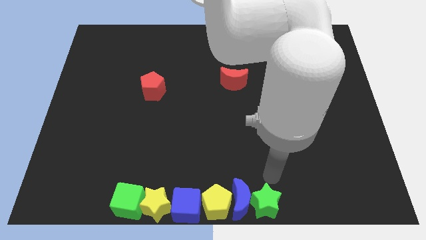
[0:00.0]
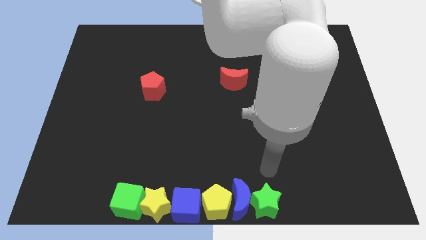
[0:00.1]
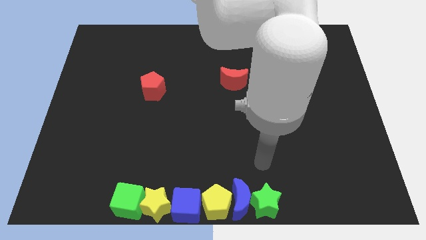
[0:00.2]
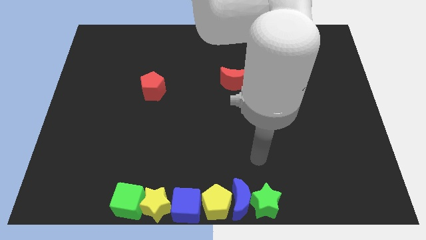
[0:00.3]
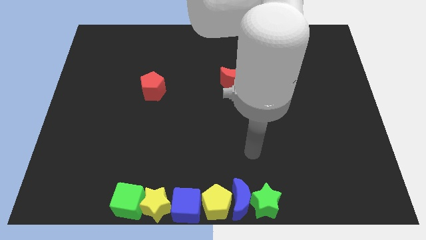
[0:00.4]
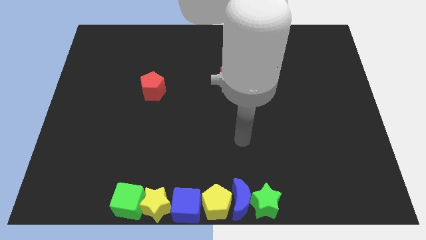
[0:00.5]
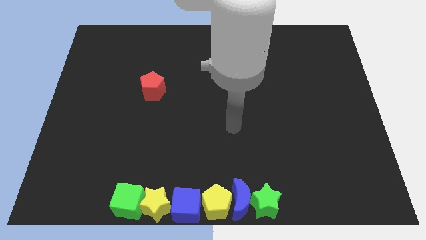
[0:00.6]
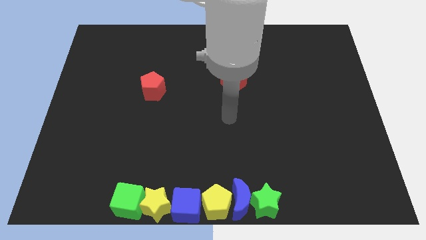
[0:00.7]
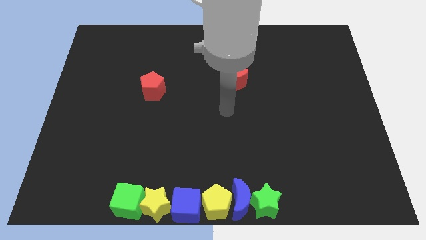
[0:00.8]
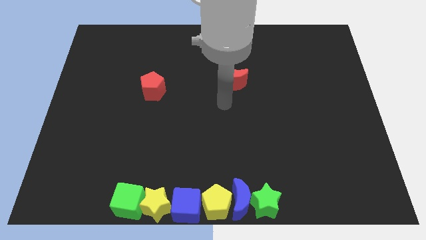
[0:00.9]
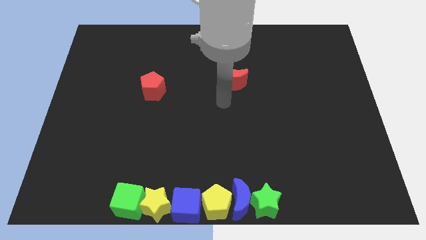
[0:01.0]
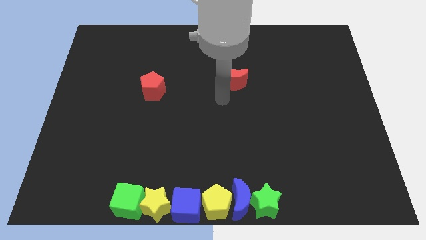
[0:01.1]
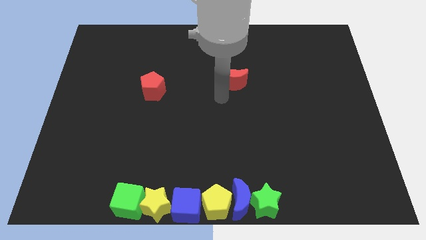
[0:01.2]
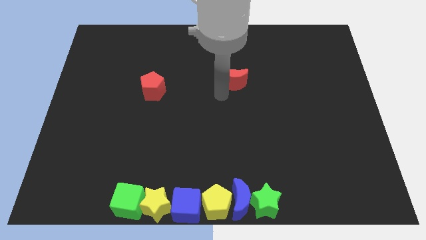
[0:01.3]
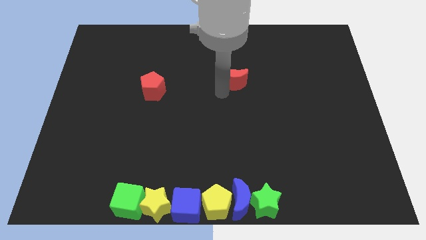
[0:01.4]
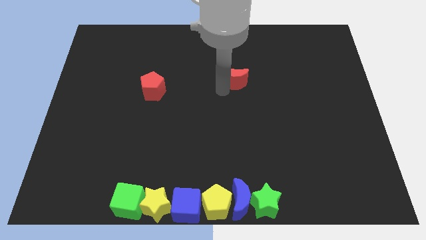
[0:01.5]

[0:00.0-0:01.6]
point the arm below the red moon

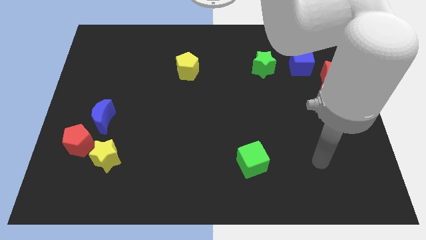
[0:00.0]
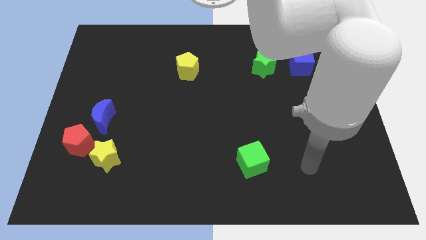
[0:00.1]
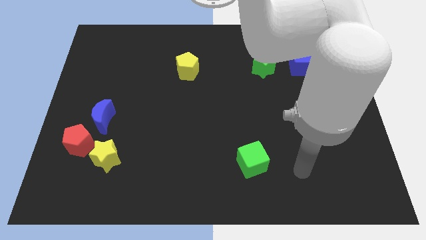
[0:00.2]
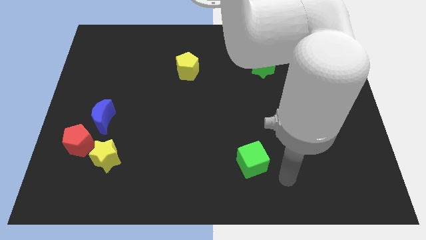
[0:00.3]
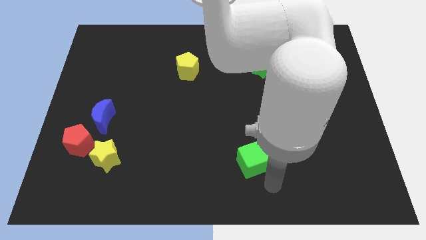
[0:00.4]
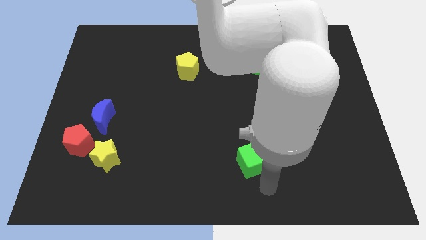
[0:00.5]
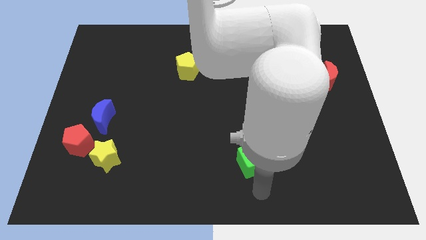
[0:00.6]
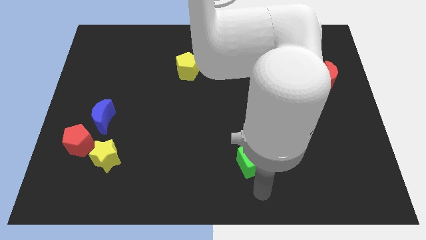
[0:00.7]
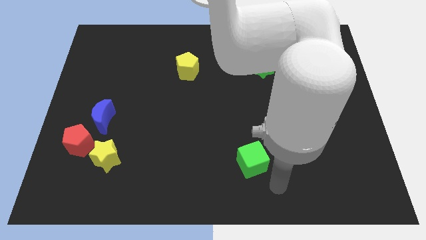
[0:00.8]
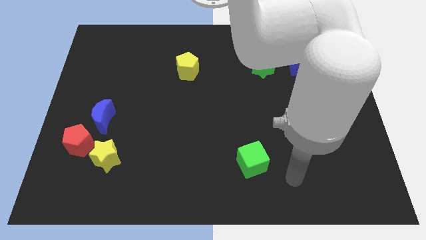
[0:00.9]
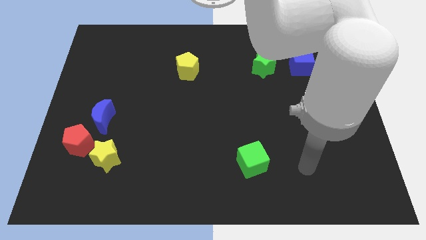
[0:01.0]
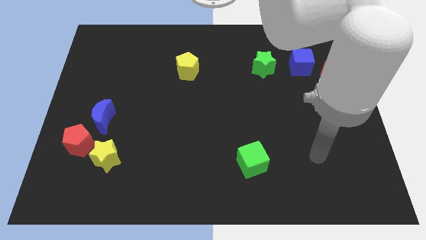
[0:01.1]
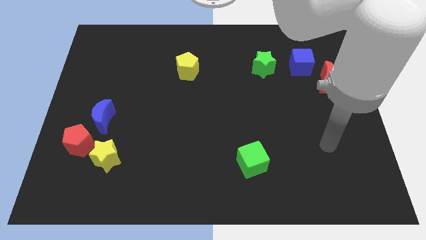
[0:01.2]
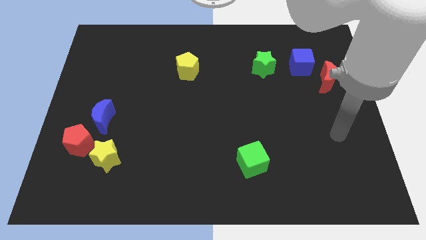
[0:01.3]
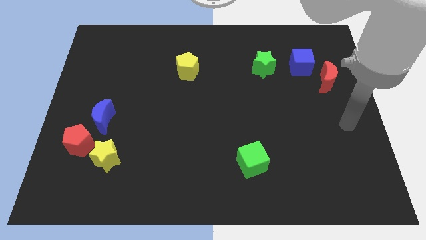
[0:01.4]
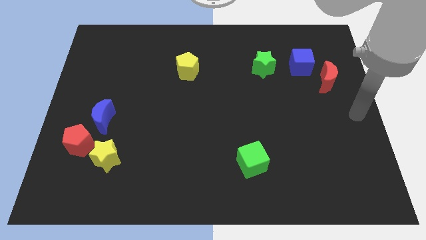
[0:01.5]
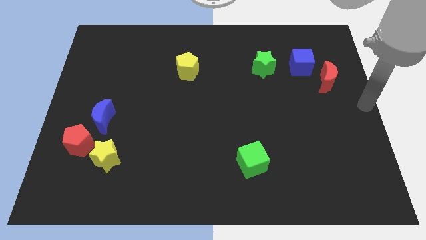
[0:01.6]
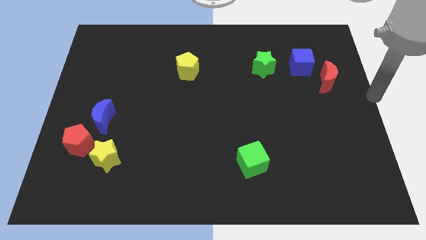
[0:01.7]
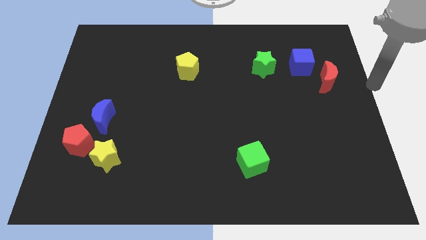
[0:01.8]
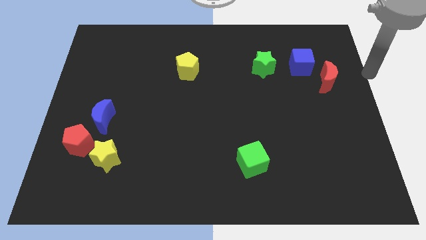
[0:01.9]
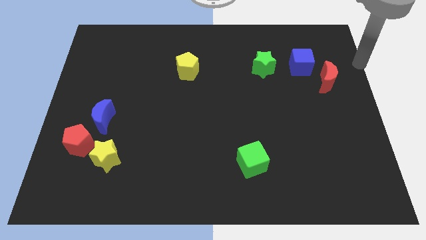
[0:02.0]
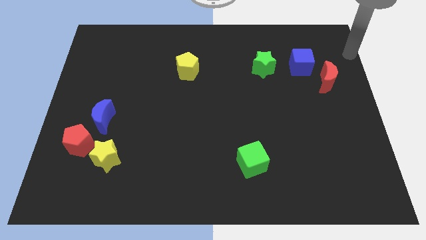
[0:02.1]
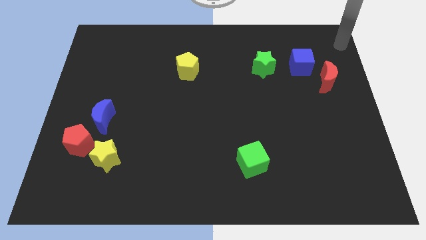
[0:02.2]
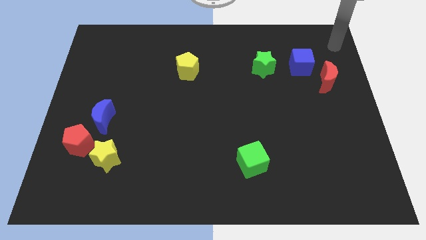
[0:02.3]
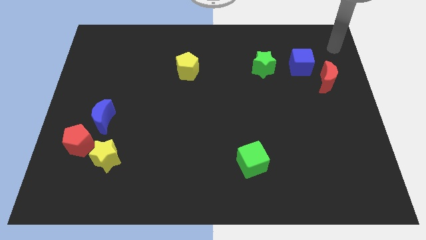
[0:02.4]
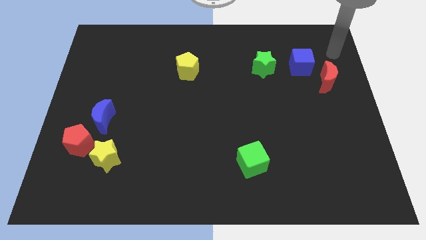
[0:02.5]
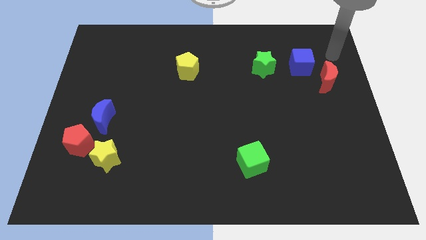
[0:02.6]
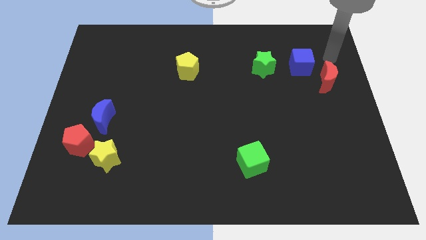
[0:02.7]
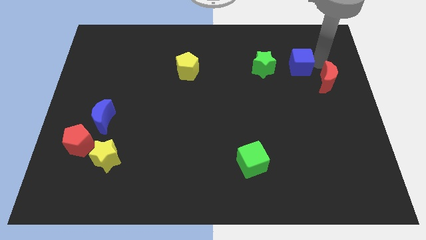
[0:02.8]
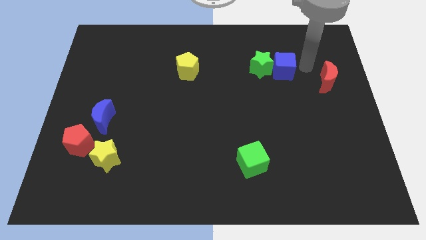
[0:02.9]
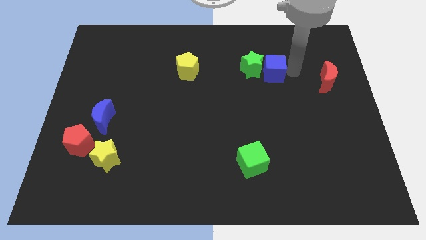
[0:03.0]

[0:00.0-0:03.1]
move the blue cube towards the green star

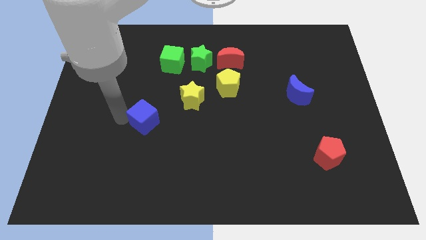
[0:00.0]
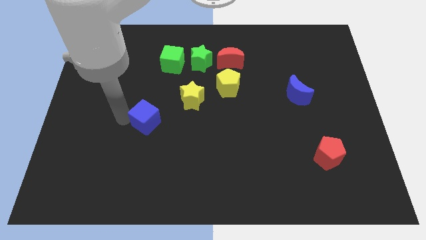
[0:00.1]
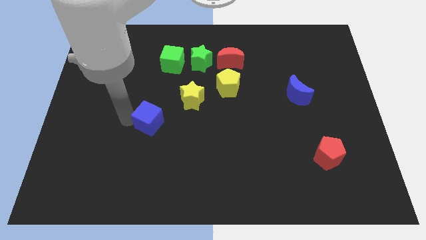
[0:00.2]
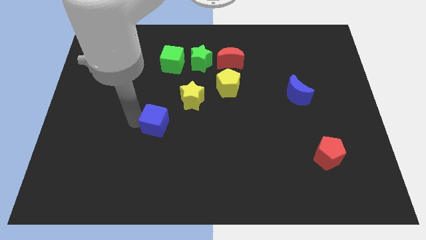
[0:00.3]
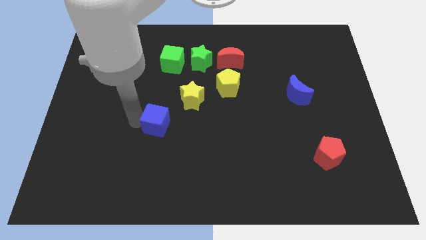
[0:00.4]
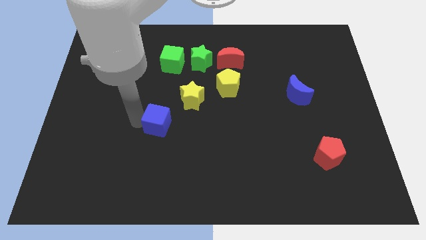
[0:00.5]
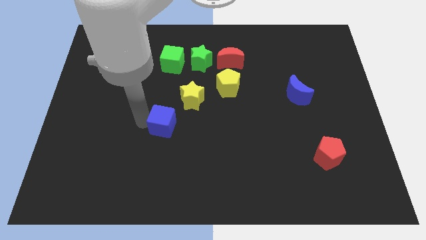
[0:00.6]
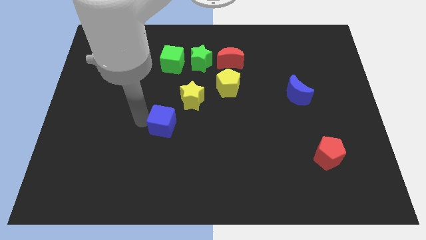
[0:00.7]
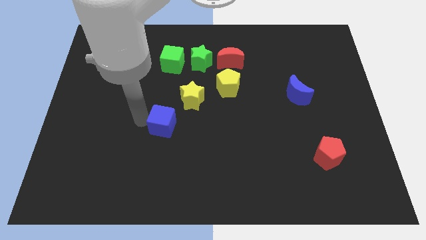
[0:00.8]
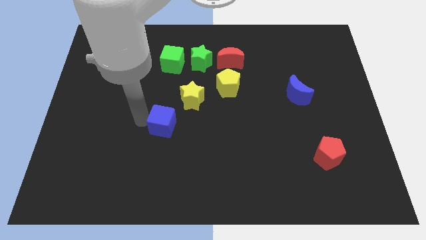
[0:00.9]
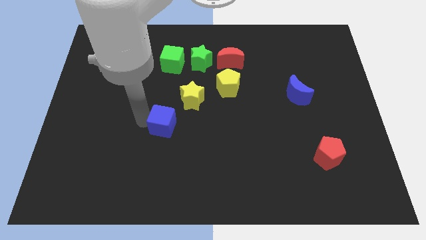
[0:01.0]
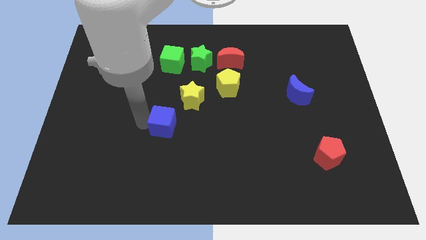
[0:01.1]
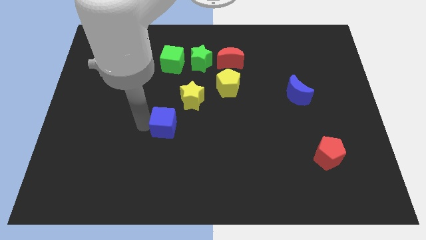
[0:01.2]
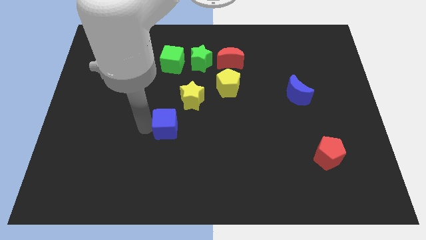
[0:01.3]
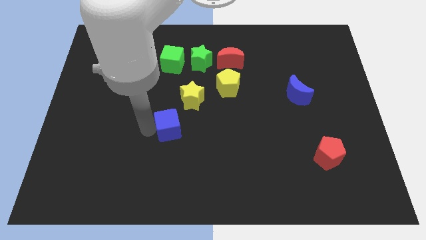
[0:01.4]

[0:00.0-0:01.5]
move the blue cube towards center of the board

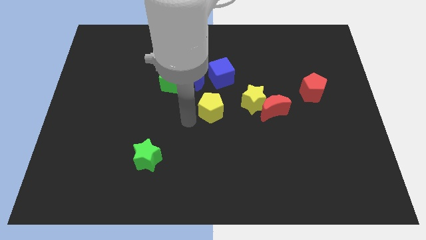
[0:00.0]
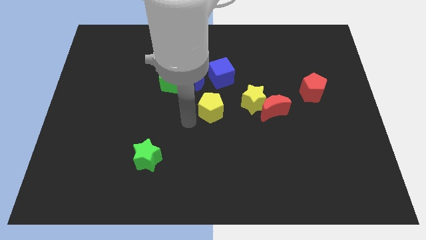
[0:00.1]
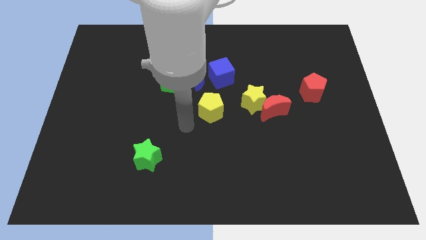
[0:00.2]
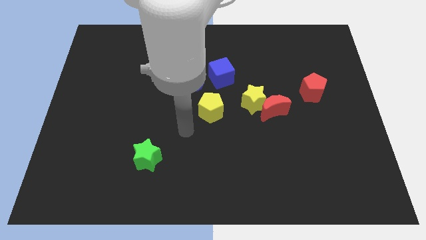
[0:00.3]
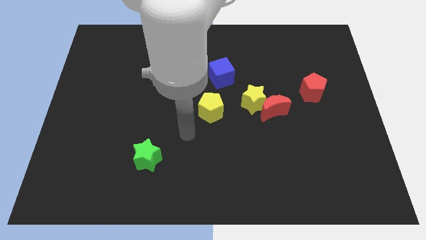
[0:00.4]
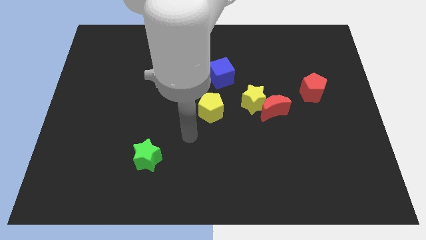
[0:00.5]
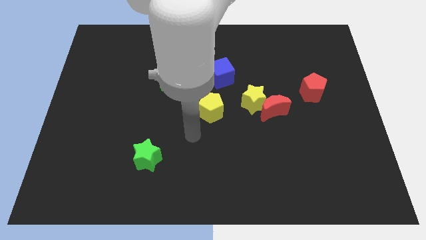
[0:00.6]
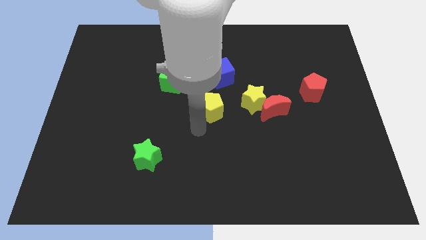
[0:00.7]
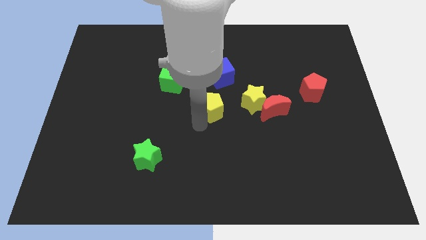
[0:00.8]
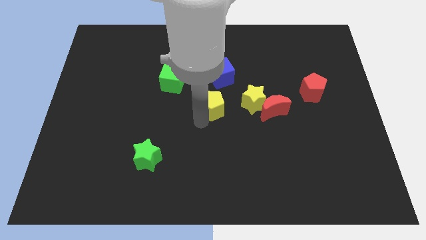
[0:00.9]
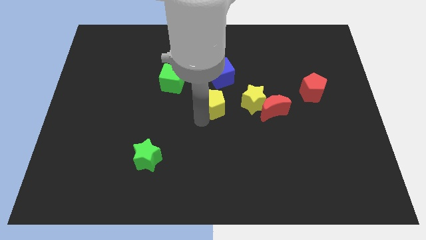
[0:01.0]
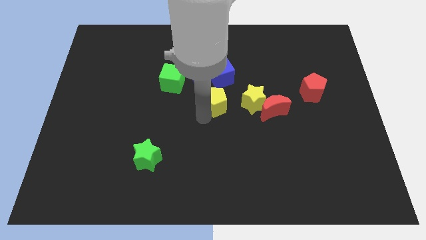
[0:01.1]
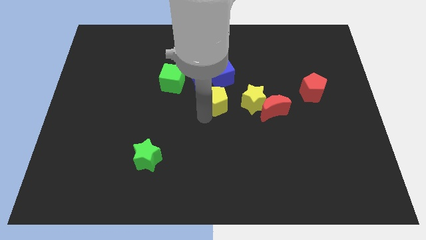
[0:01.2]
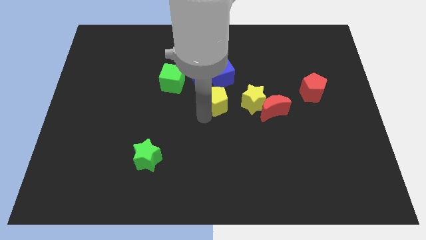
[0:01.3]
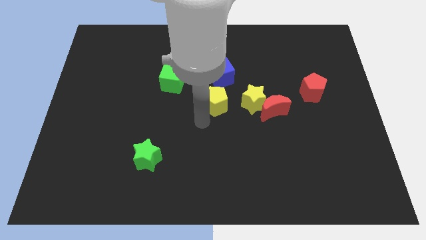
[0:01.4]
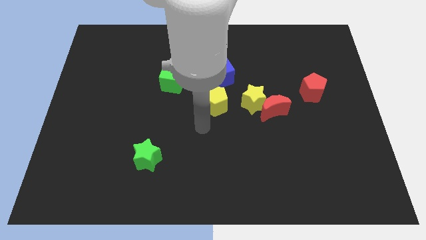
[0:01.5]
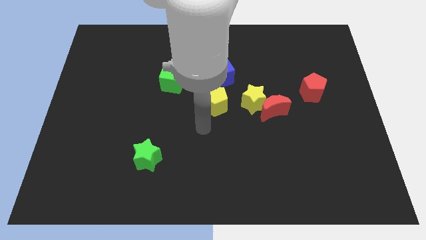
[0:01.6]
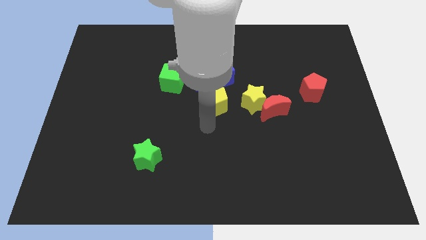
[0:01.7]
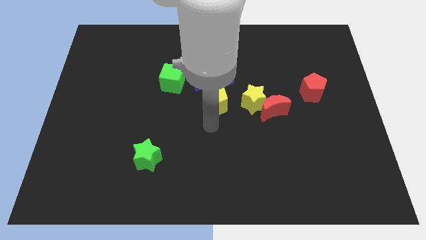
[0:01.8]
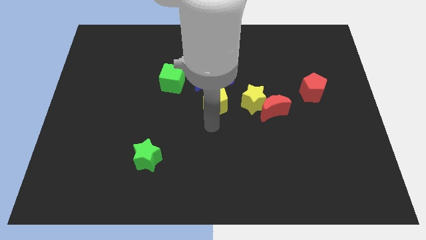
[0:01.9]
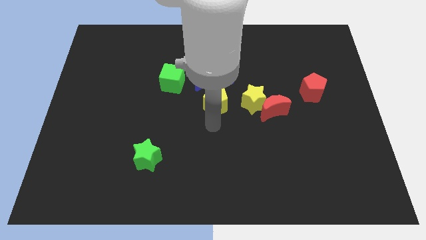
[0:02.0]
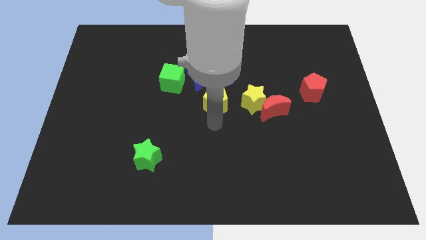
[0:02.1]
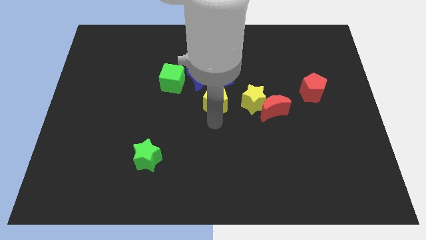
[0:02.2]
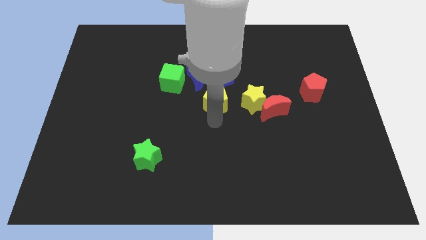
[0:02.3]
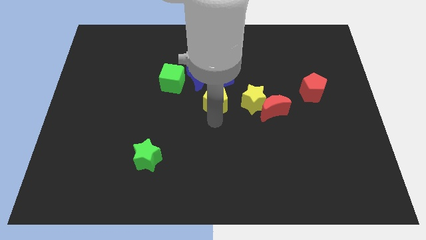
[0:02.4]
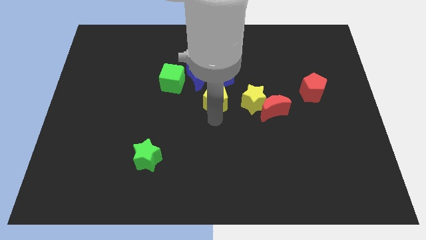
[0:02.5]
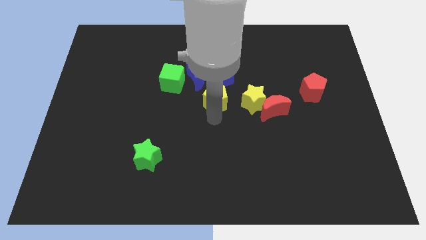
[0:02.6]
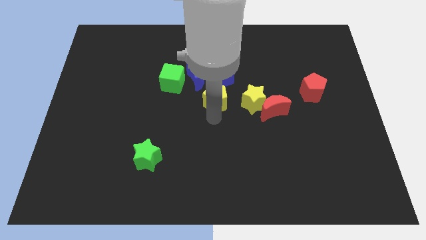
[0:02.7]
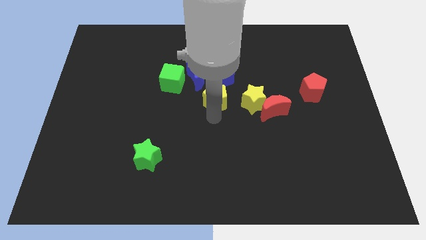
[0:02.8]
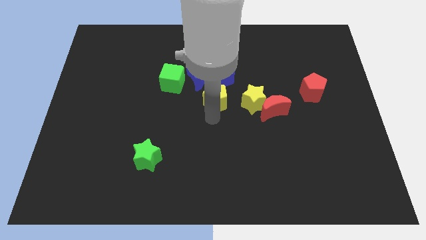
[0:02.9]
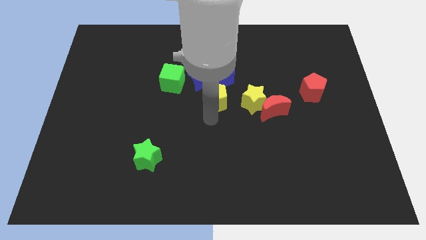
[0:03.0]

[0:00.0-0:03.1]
push the yellow pentagon at the center of the board
